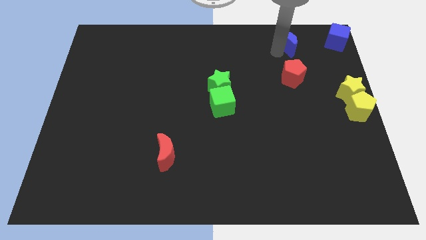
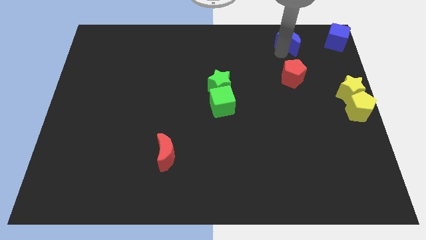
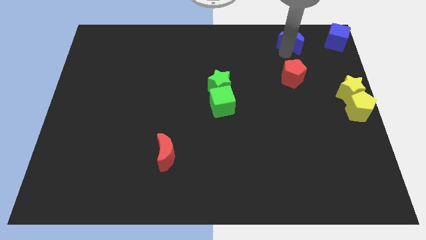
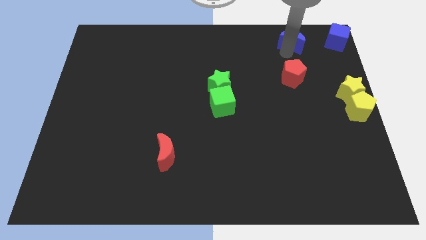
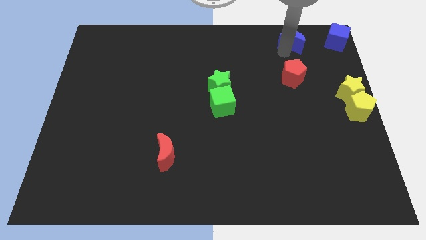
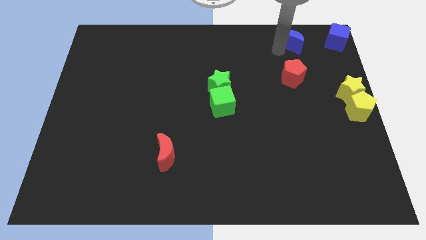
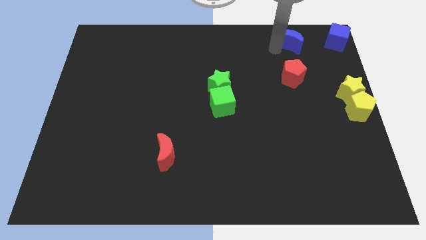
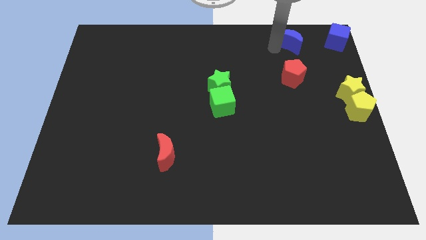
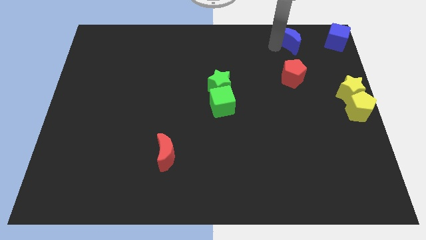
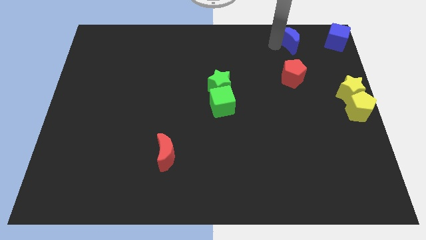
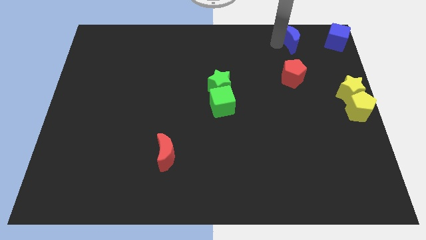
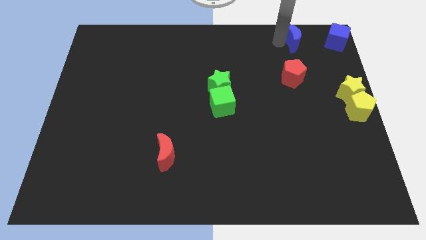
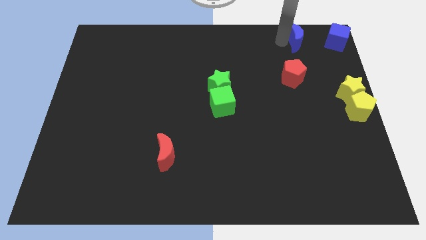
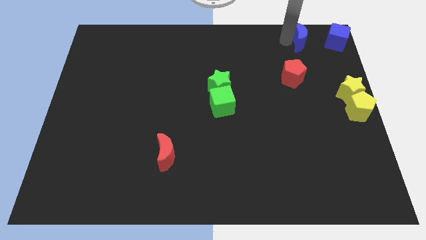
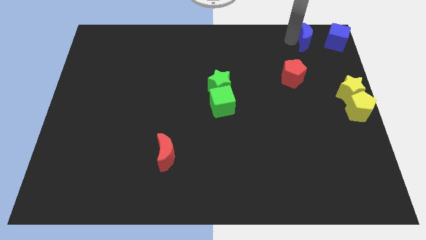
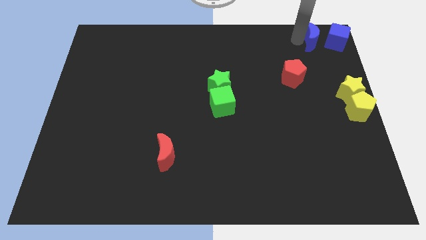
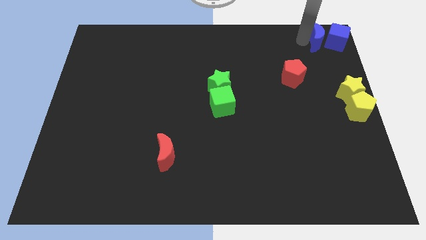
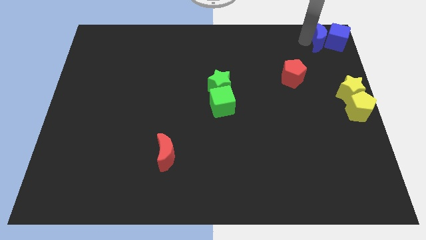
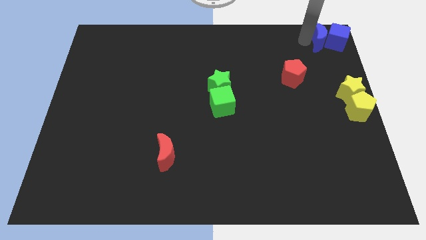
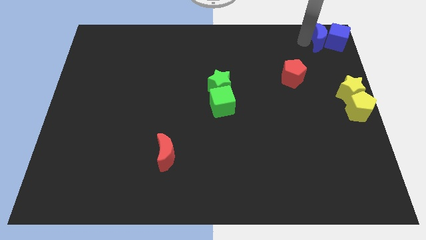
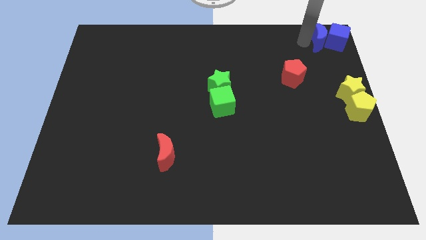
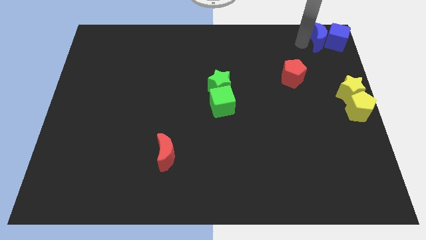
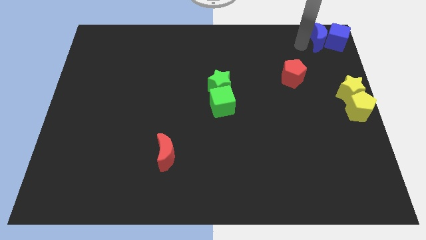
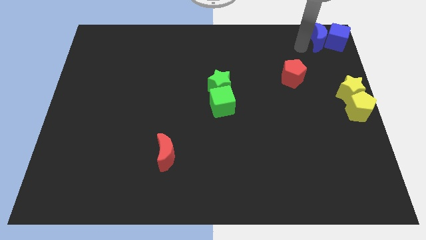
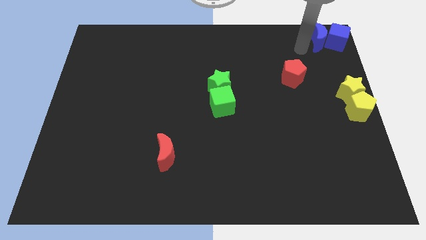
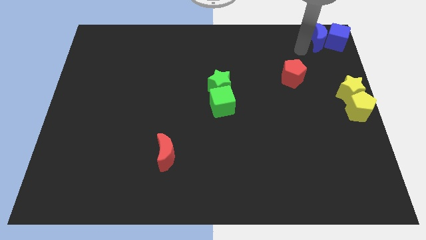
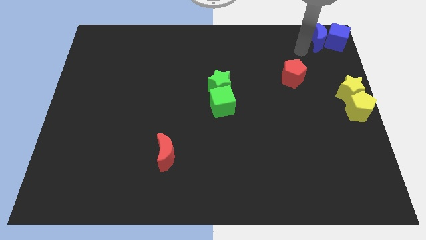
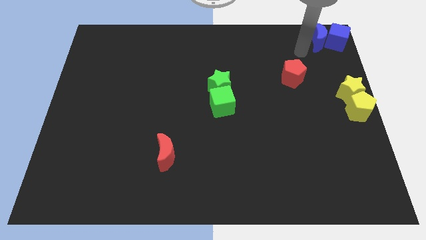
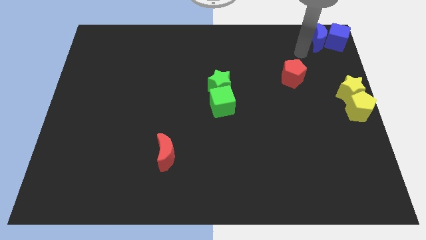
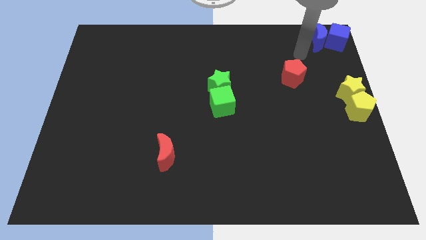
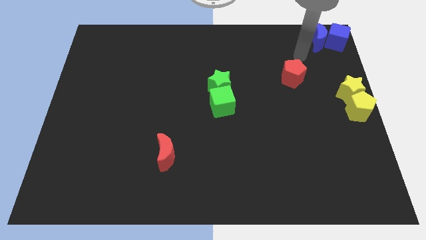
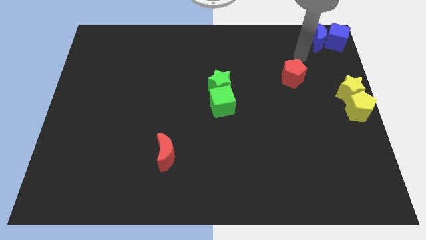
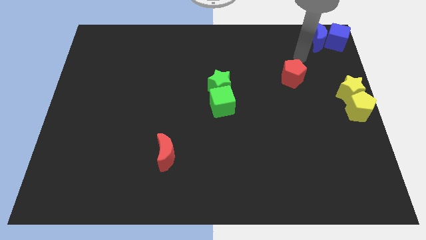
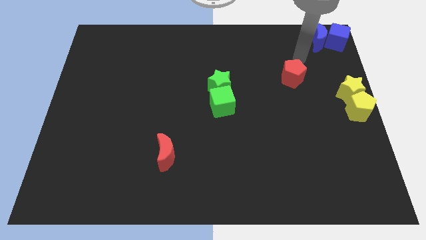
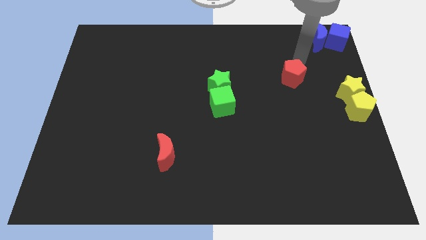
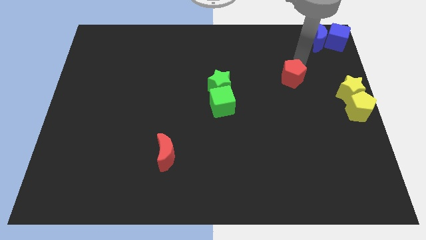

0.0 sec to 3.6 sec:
move blue crescent into blue cube

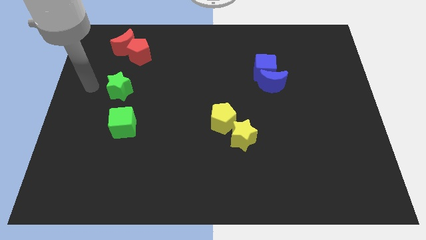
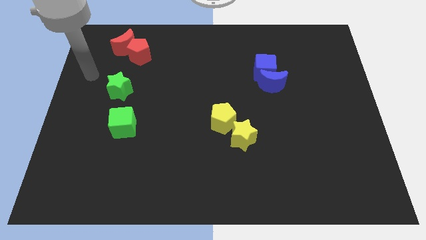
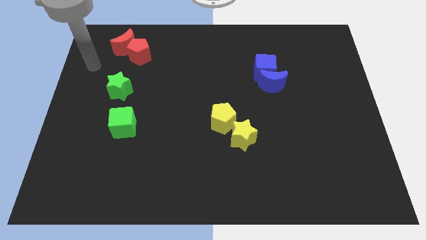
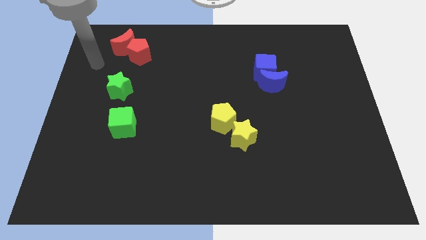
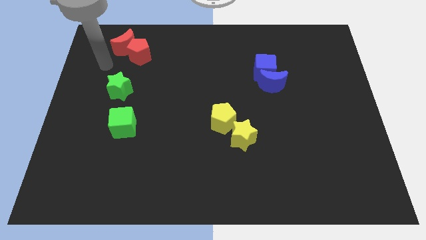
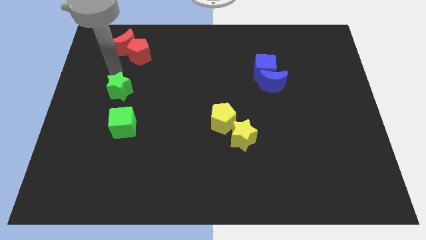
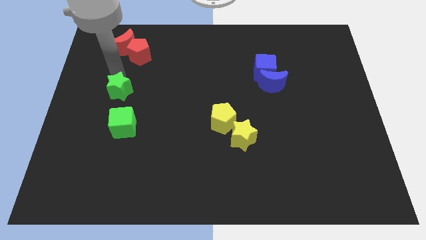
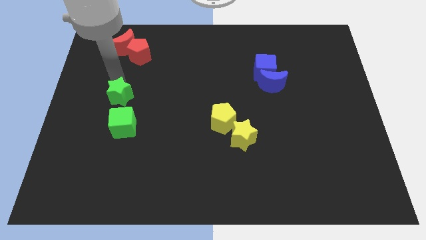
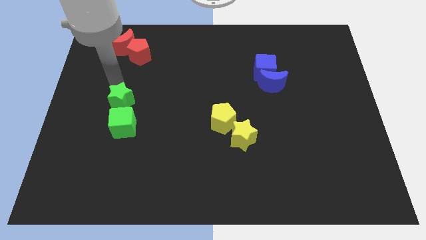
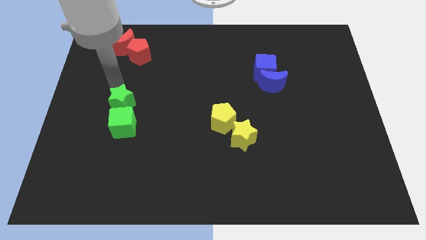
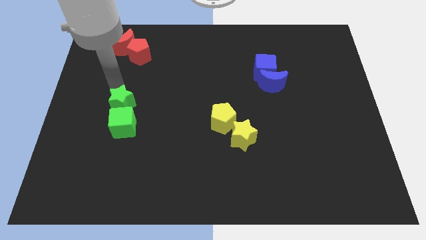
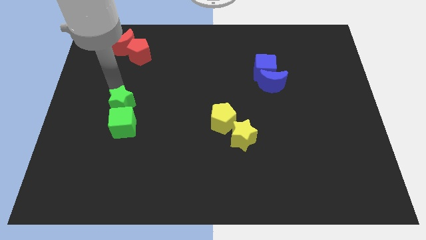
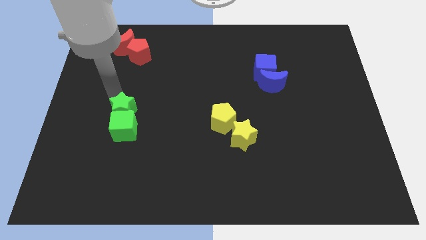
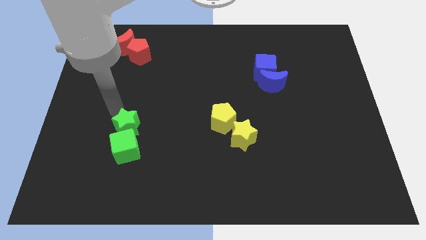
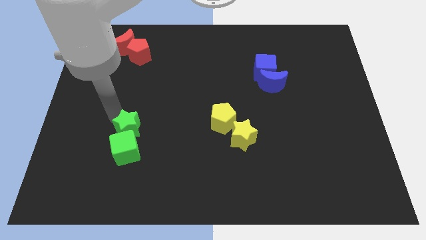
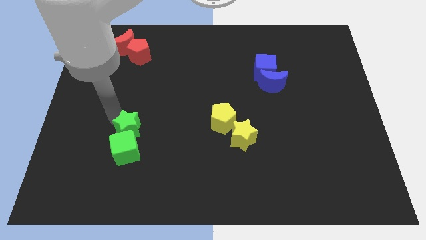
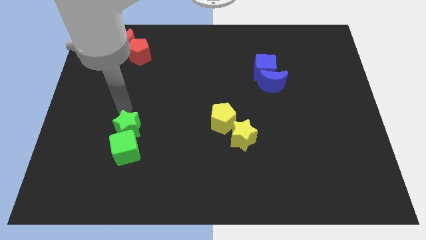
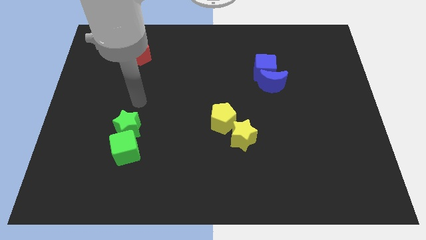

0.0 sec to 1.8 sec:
push the green star above the green cube

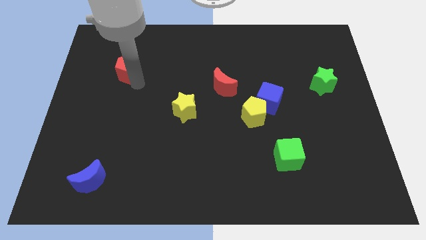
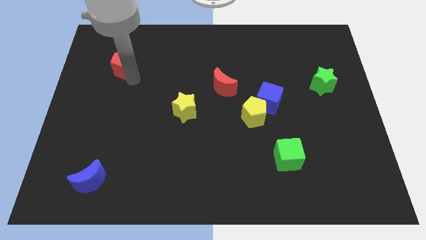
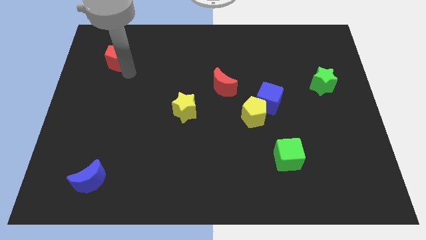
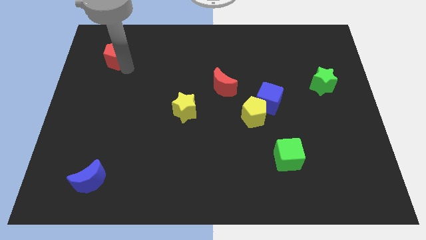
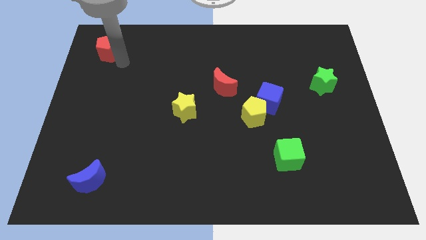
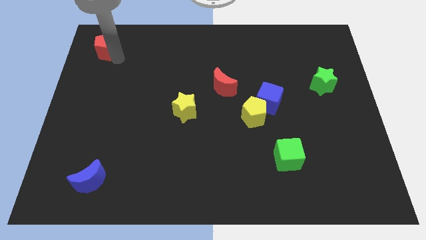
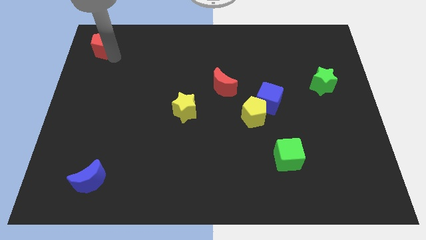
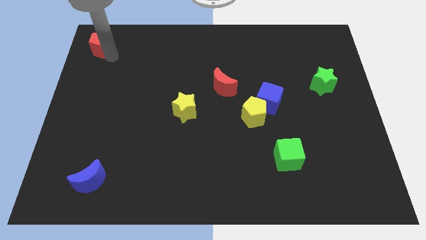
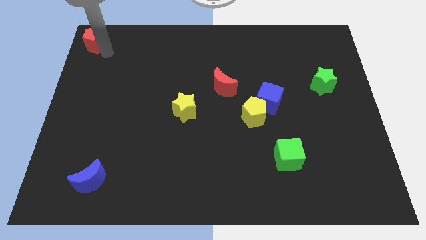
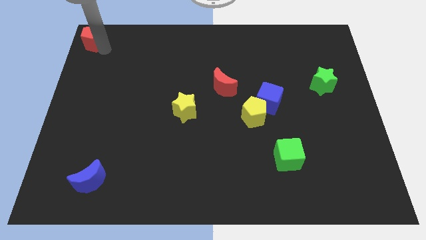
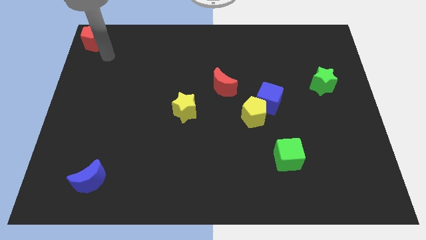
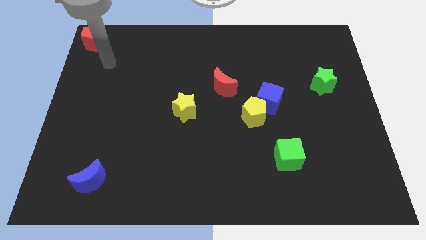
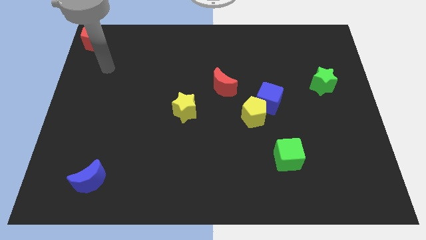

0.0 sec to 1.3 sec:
push the red pentagon to the top left corner of the board

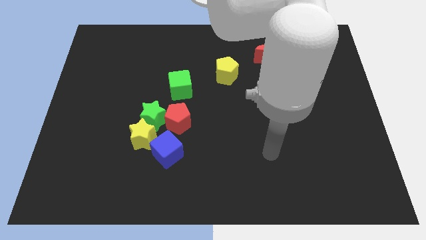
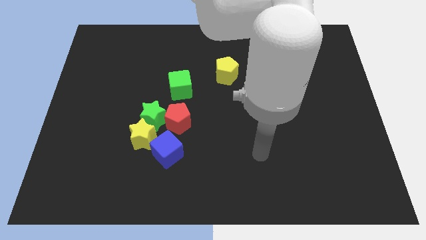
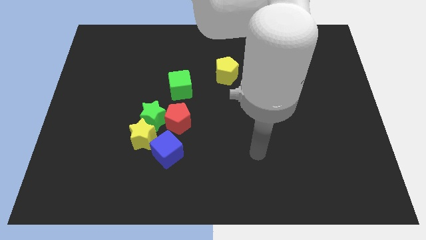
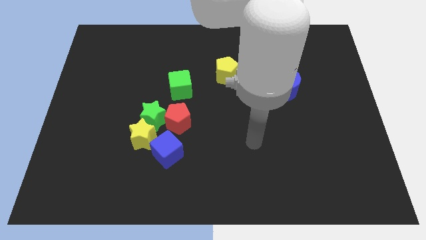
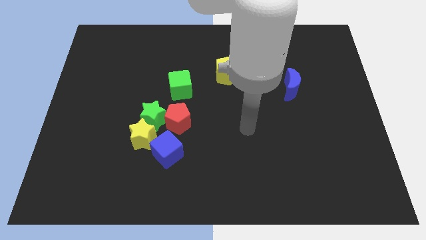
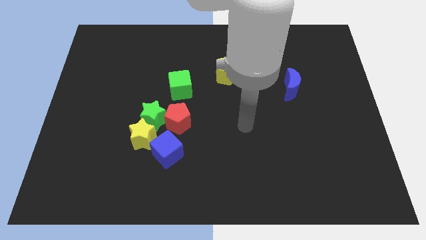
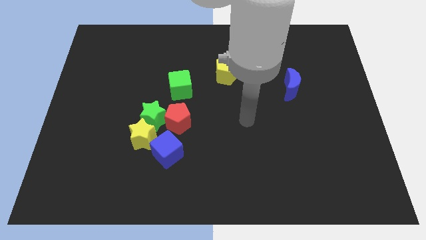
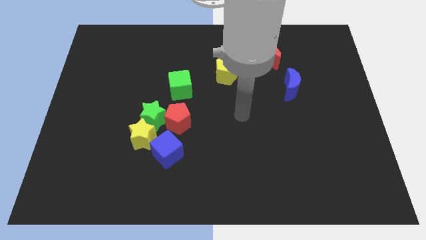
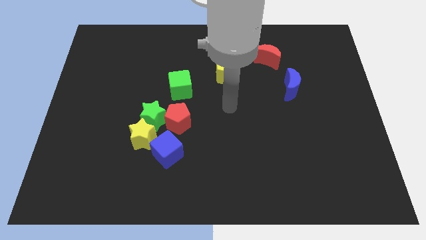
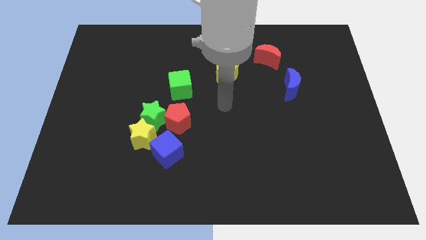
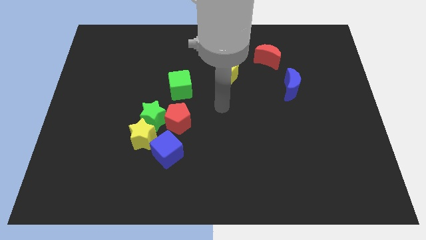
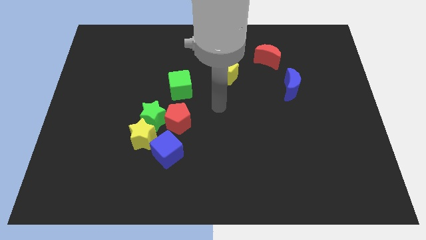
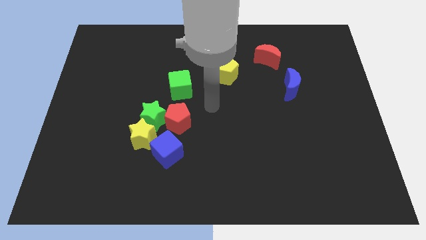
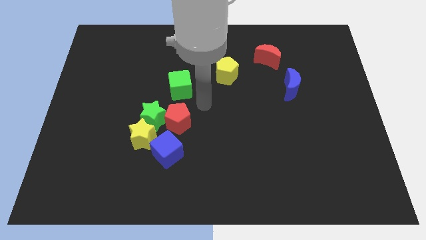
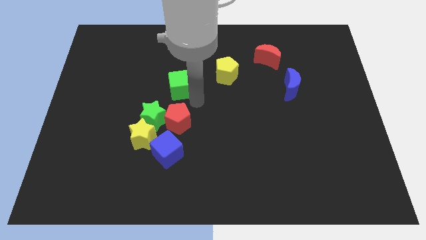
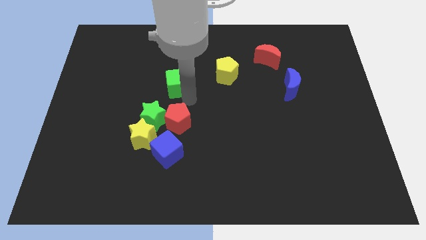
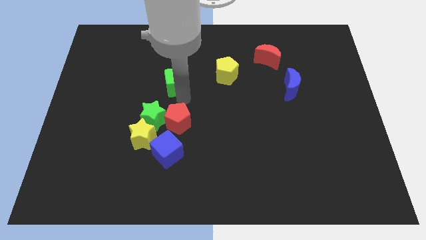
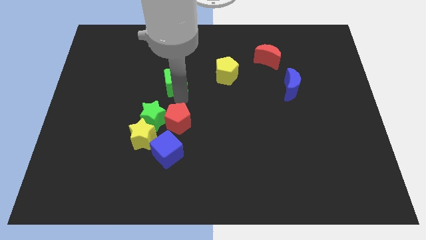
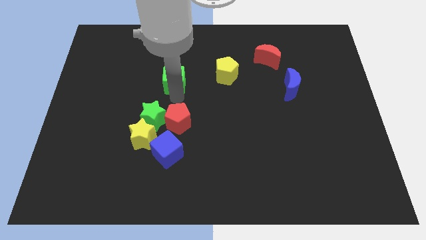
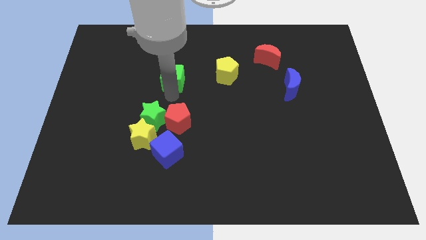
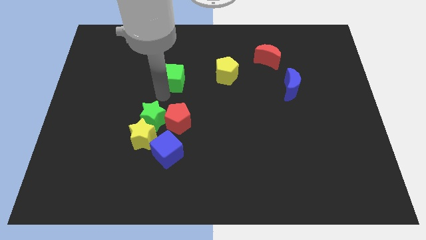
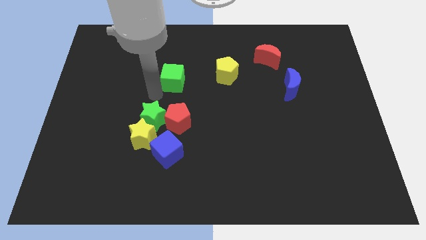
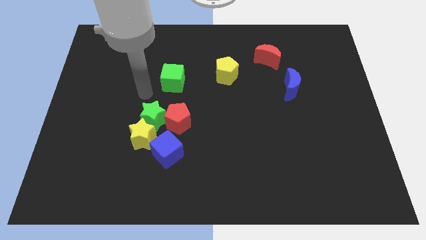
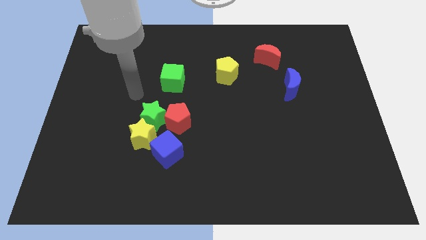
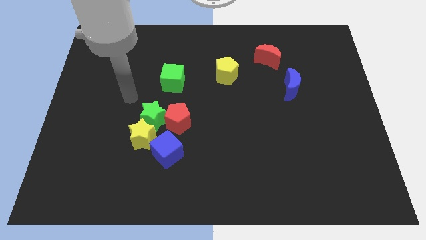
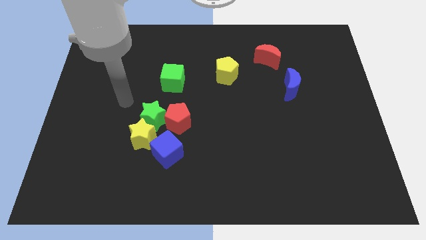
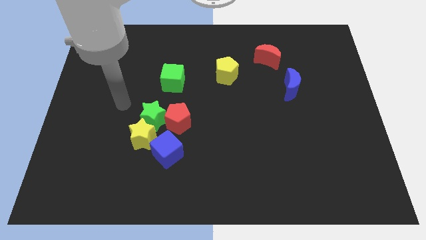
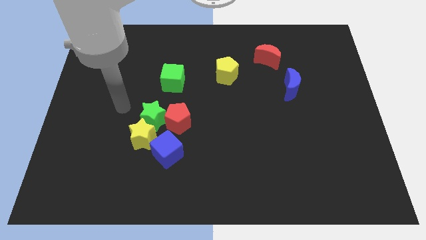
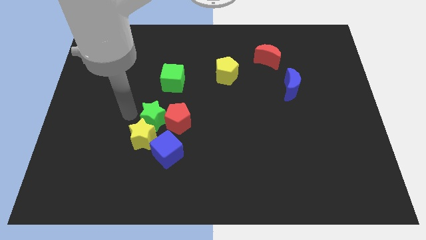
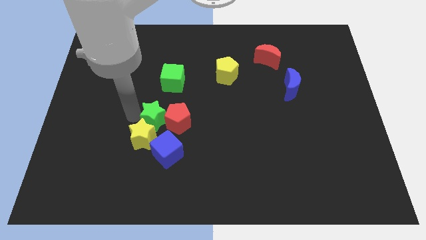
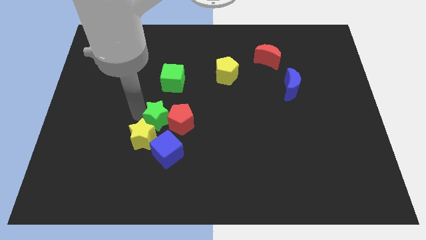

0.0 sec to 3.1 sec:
touch the bottom side of the green cube and left sid of the green star
